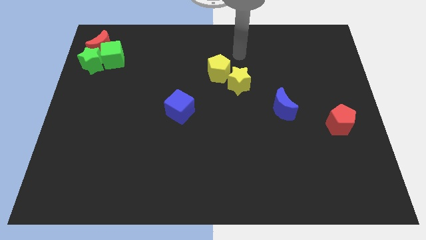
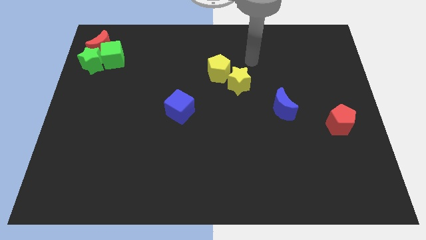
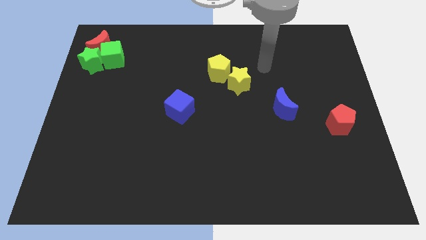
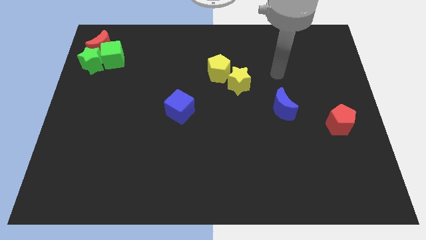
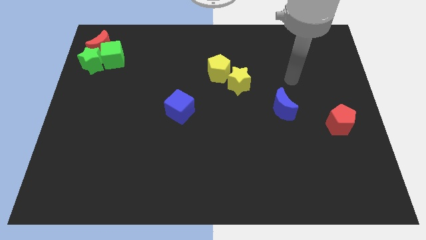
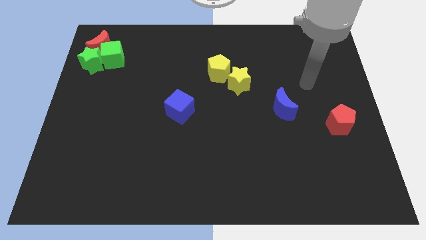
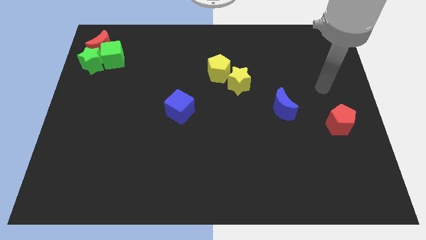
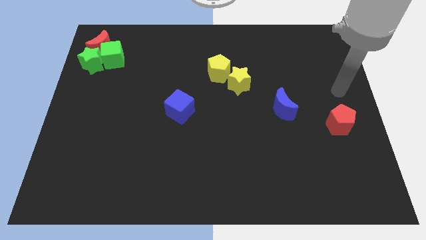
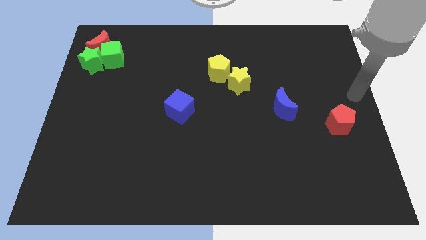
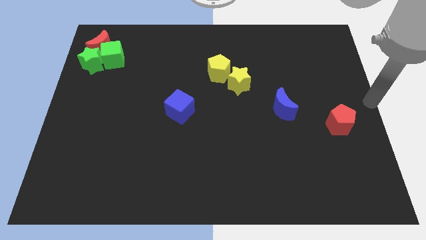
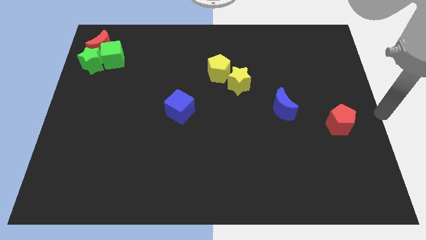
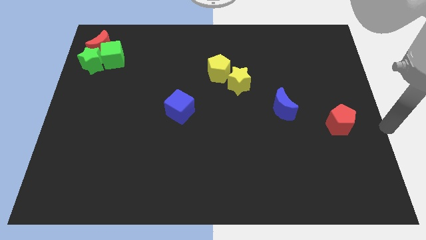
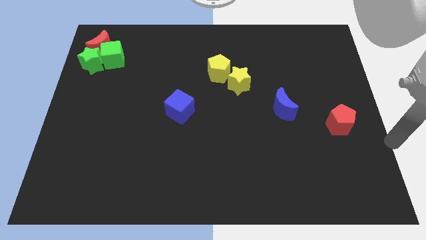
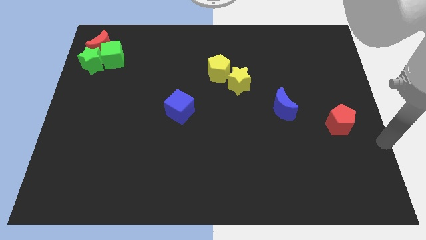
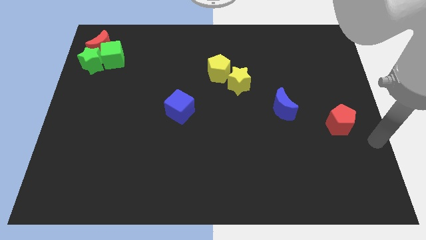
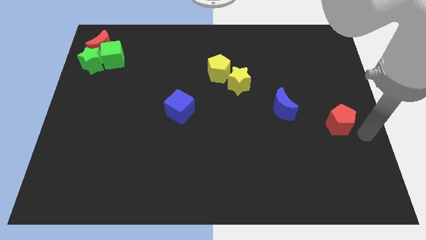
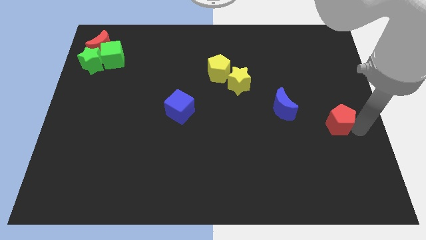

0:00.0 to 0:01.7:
move your arm towards the bottom right corner

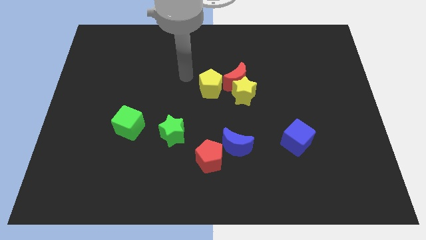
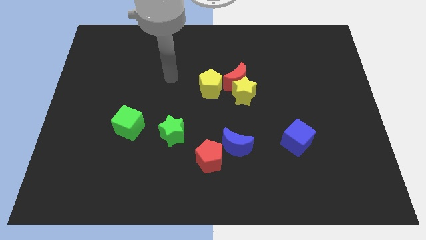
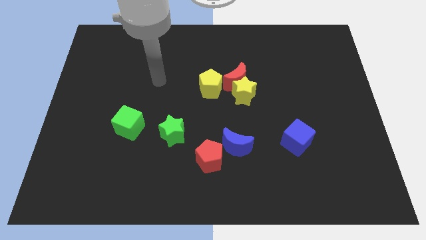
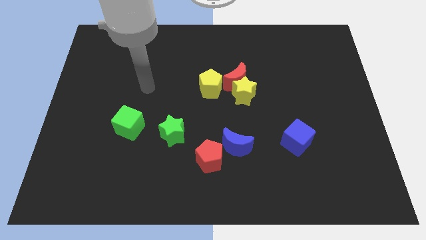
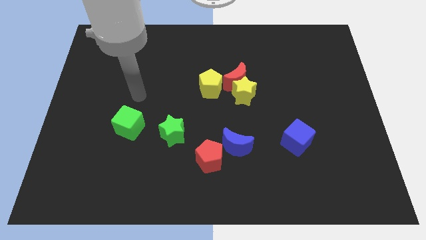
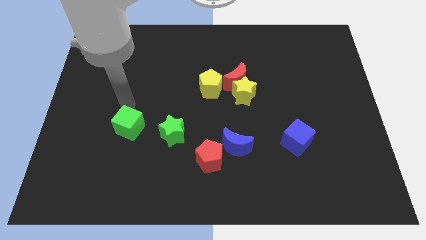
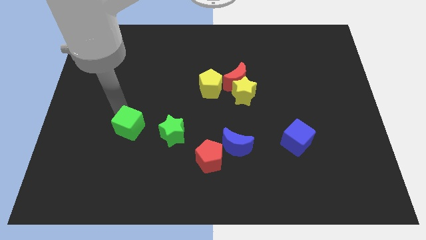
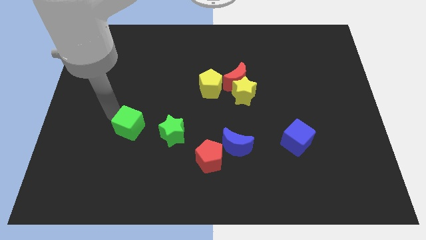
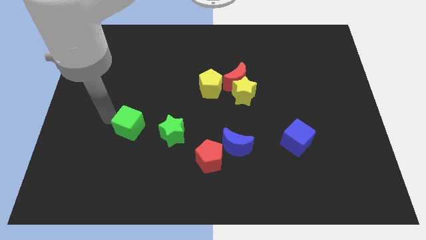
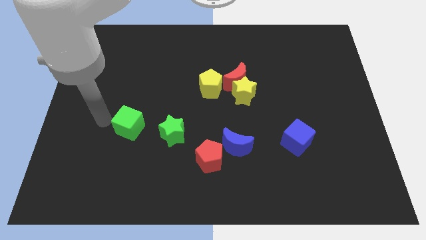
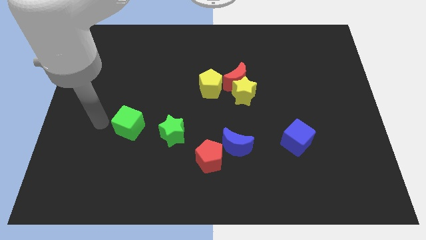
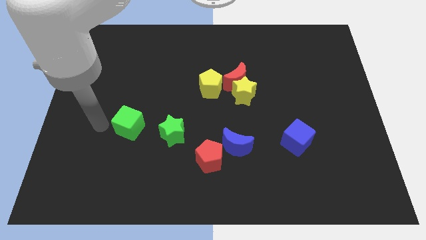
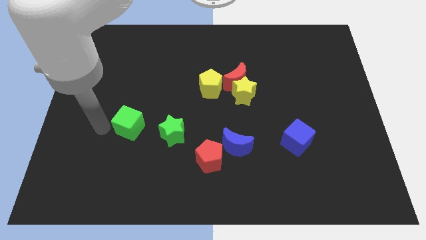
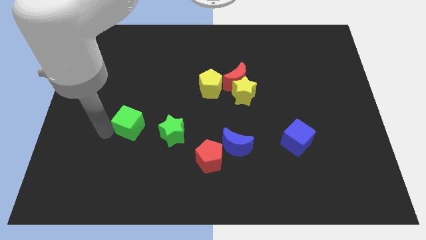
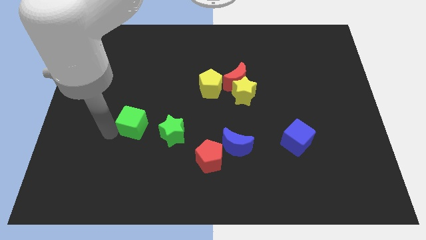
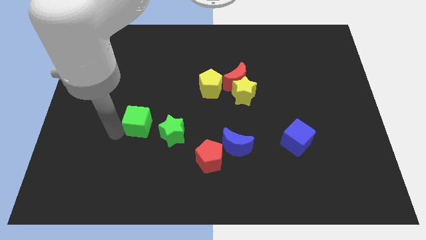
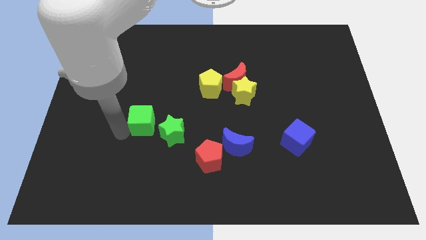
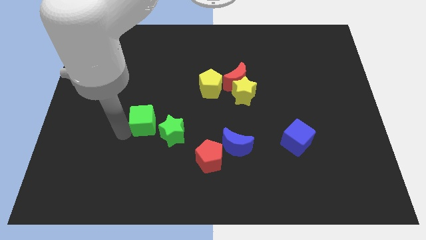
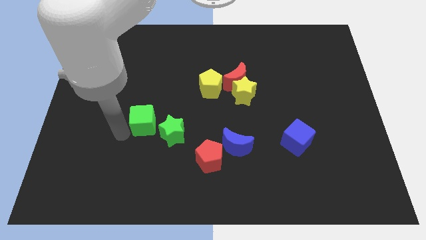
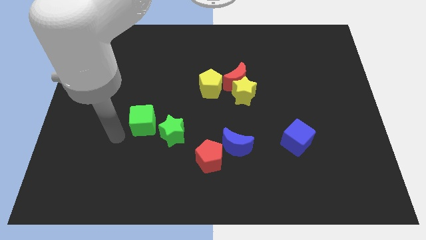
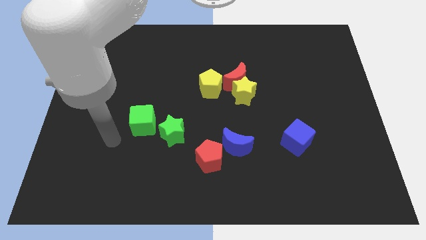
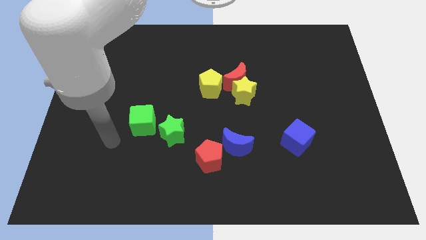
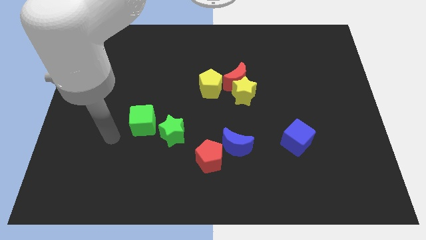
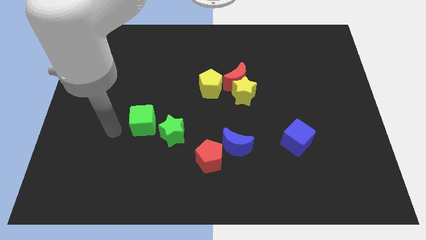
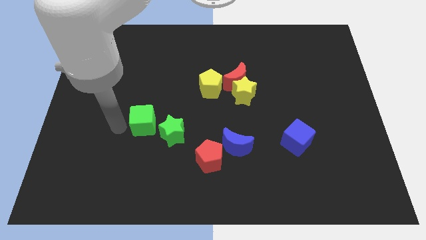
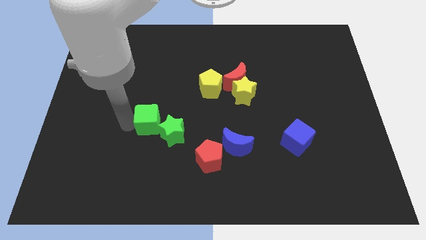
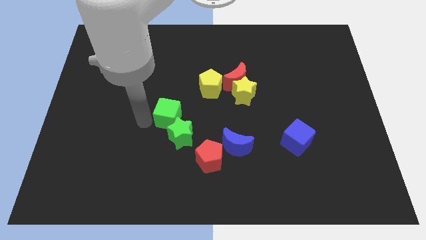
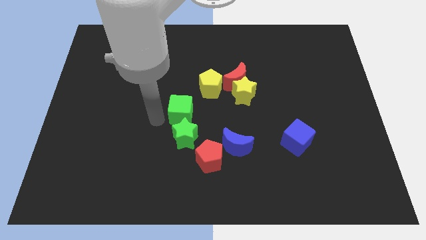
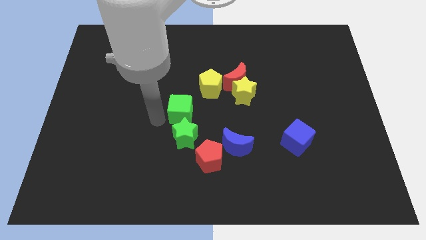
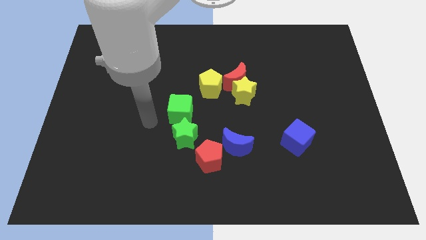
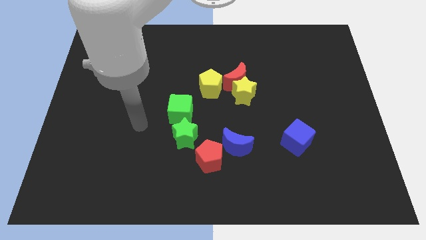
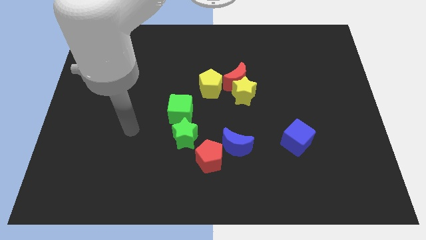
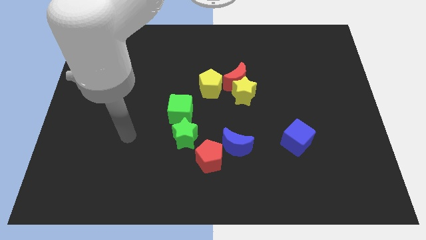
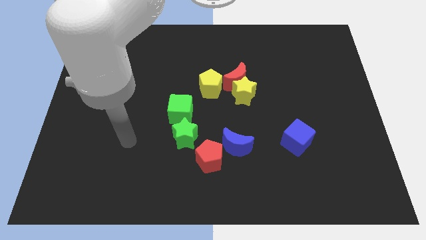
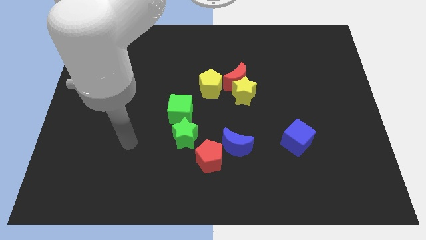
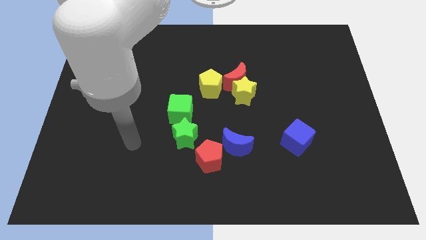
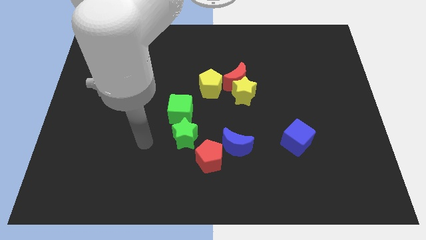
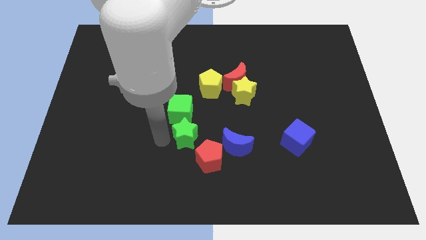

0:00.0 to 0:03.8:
push the green cube to the top side of the green star

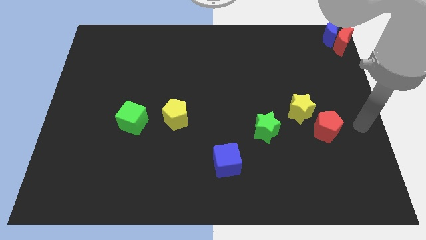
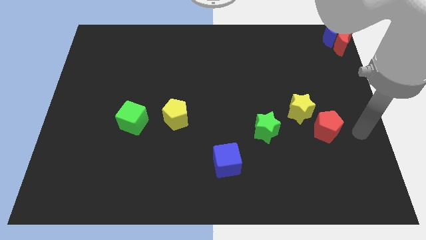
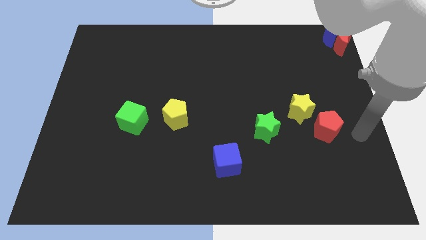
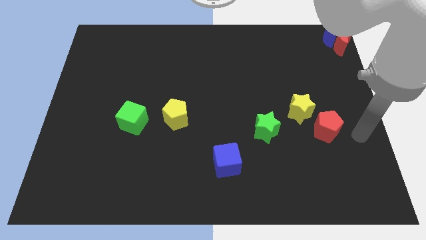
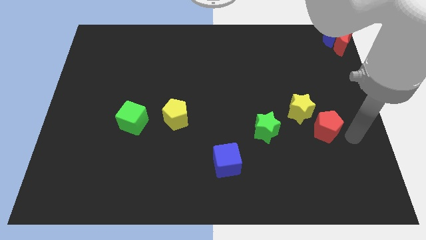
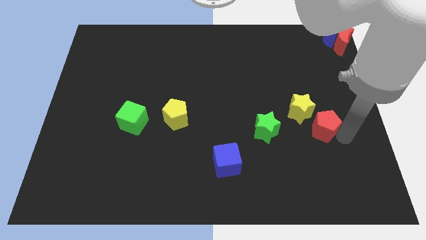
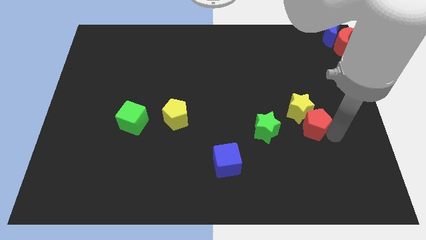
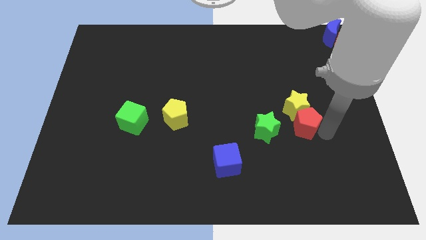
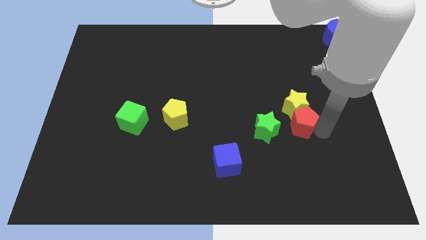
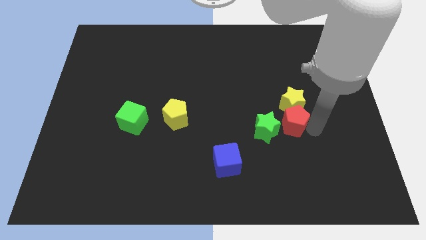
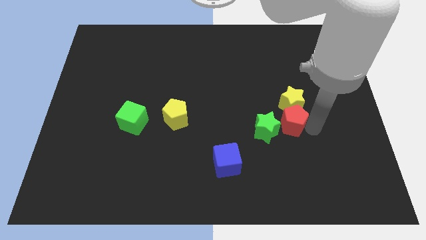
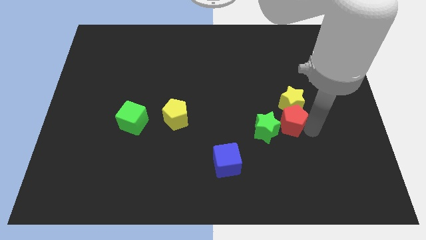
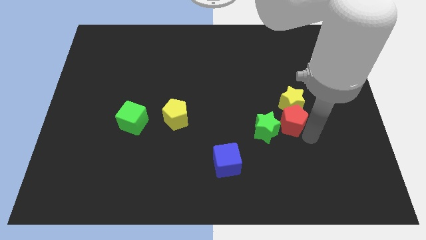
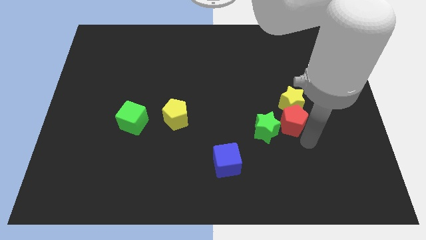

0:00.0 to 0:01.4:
push the red pentagon into the bottom of yellow star

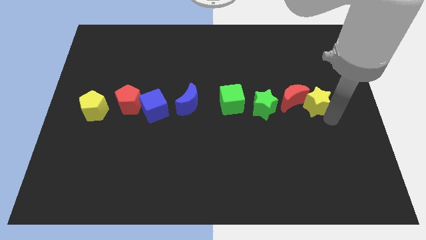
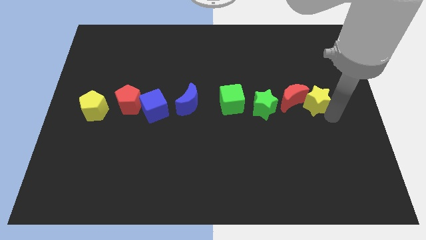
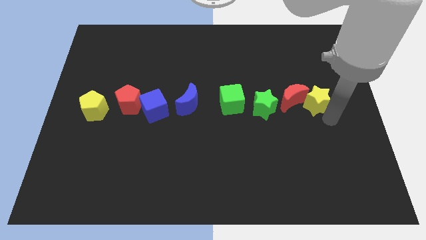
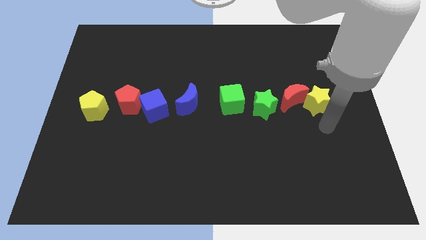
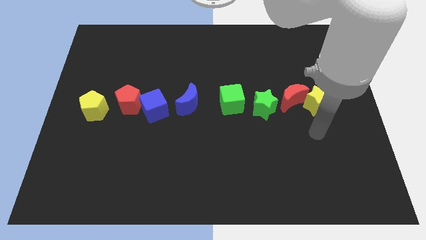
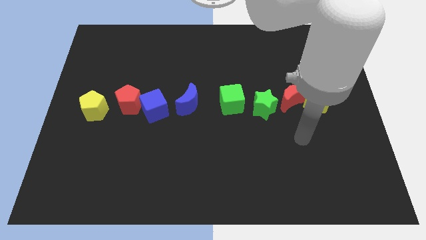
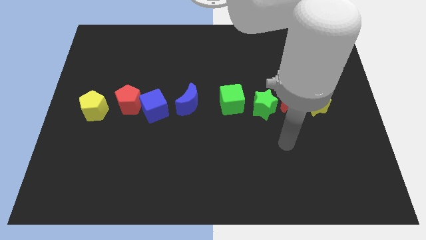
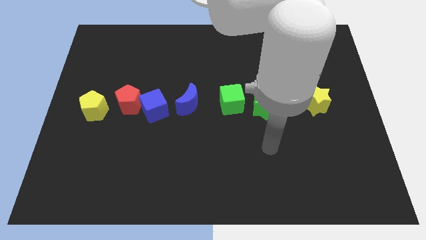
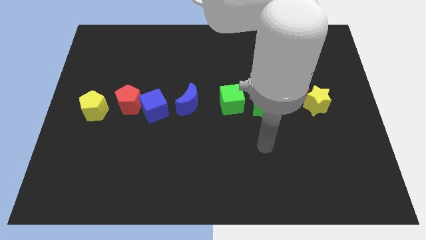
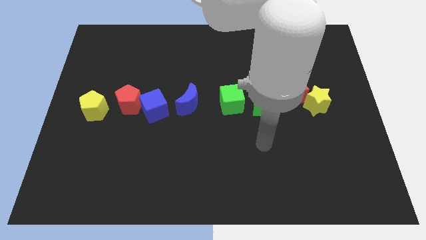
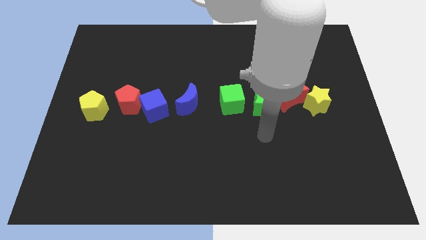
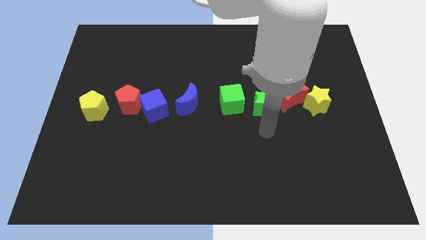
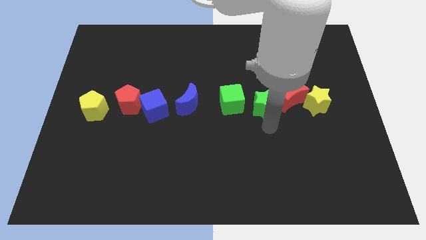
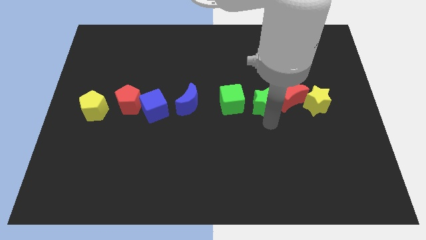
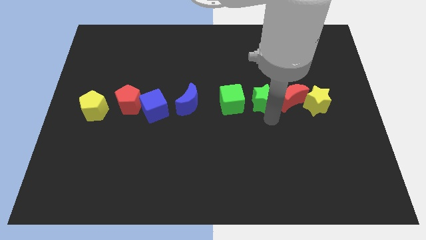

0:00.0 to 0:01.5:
place the arm down to the green star

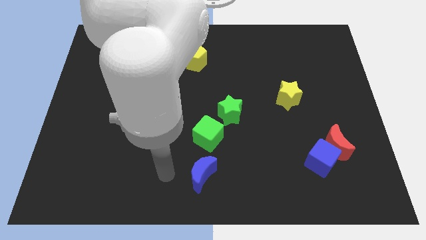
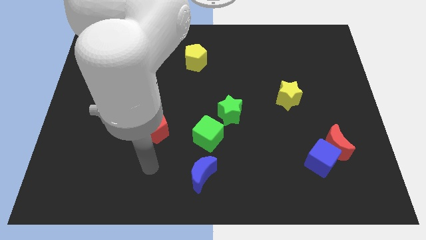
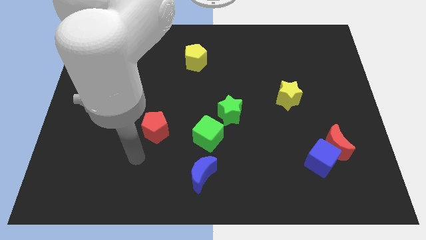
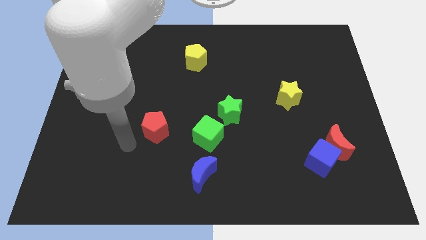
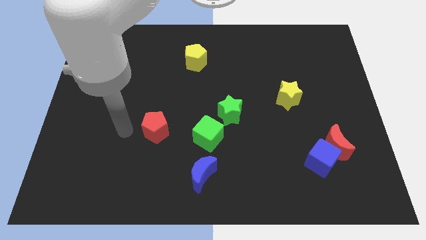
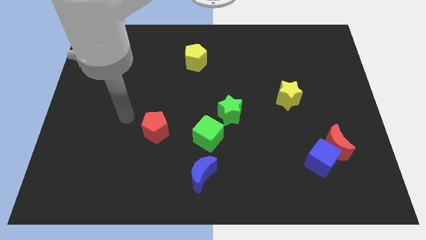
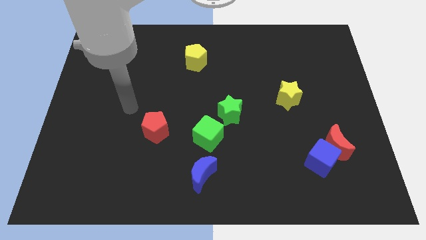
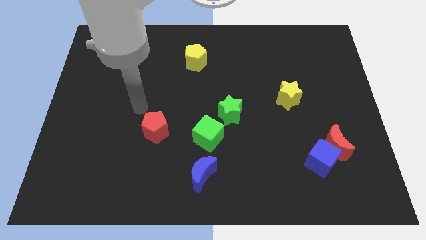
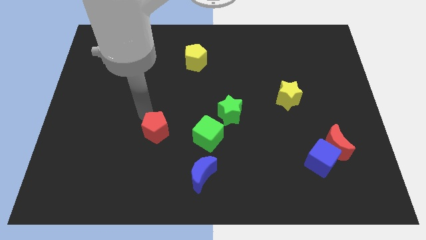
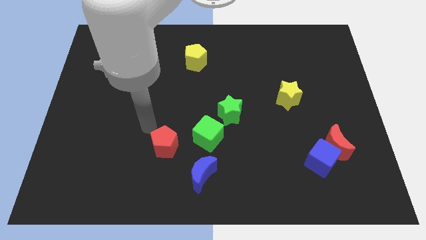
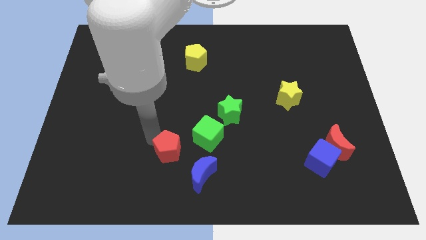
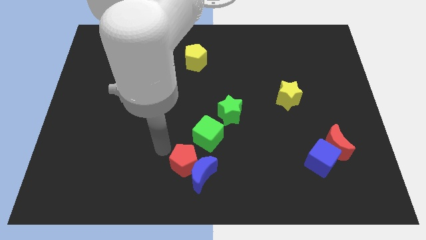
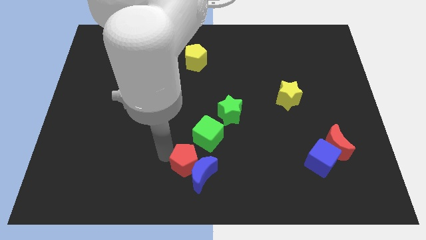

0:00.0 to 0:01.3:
push the red pentagon into the blue crescent
